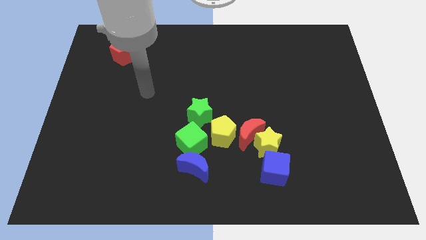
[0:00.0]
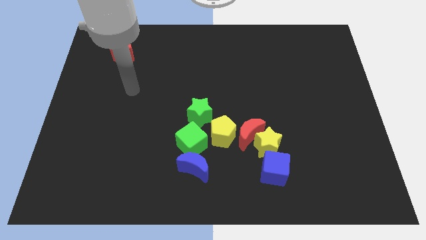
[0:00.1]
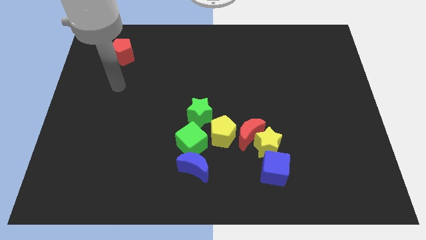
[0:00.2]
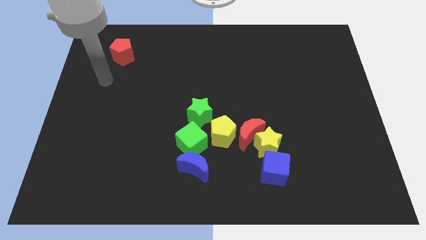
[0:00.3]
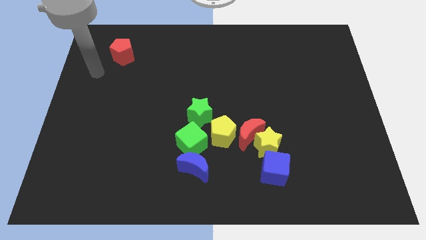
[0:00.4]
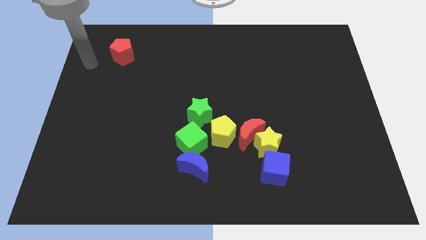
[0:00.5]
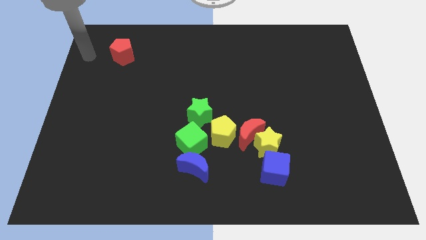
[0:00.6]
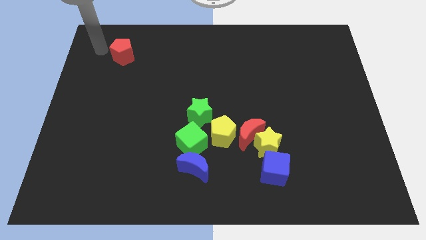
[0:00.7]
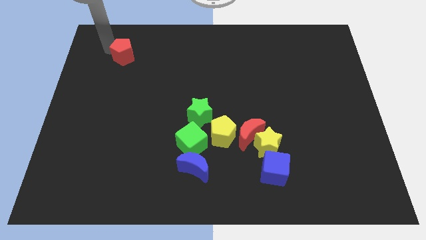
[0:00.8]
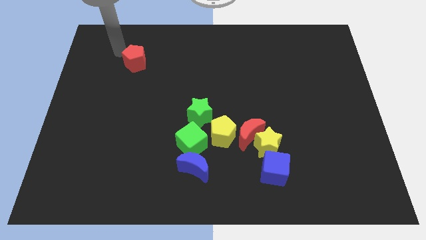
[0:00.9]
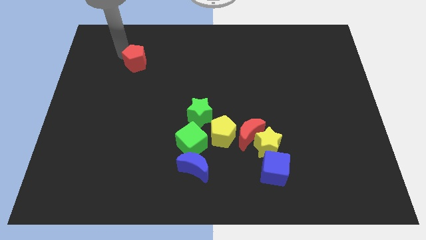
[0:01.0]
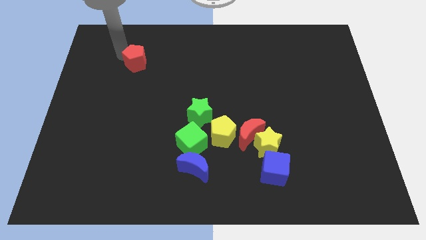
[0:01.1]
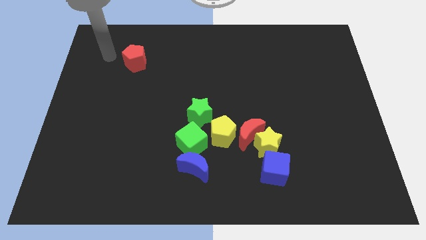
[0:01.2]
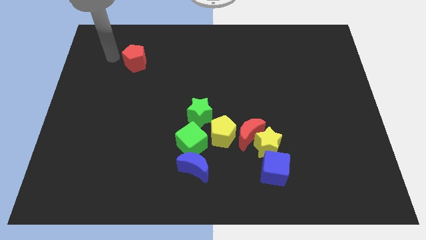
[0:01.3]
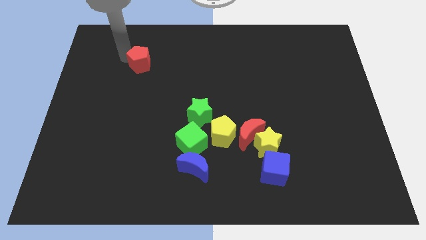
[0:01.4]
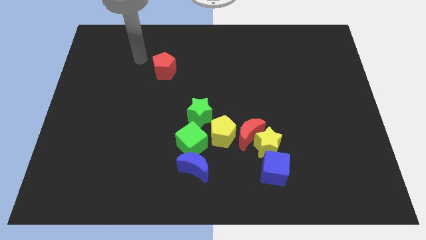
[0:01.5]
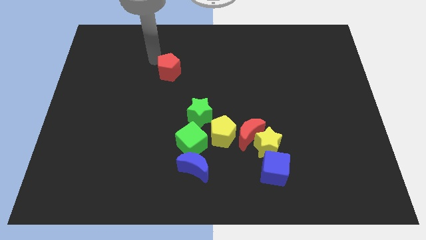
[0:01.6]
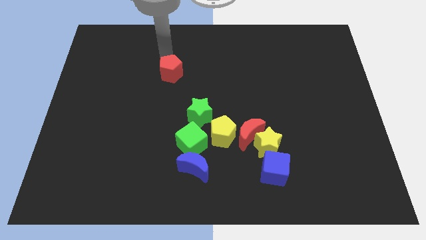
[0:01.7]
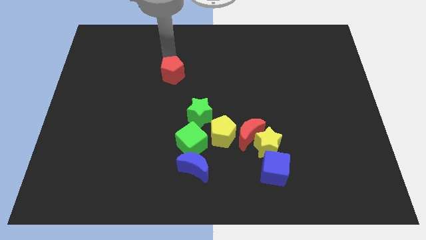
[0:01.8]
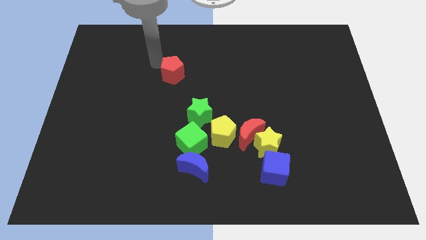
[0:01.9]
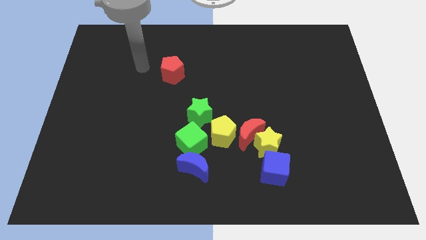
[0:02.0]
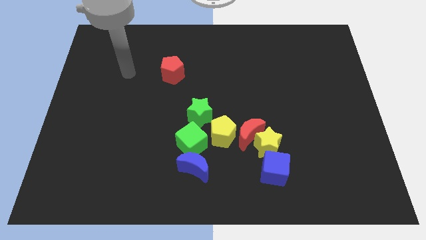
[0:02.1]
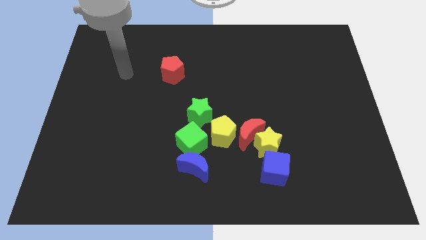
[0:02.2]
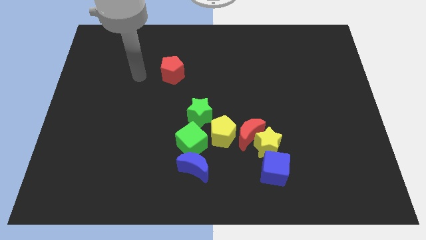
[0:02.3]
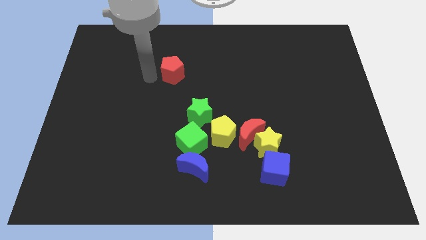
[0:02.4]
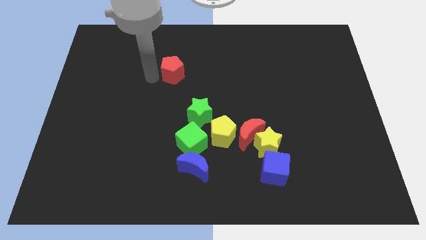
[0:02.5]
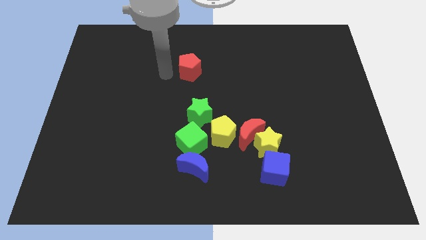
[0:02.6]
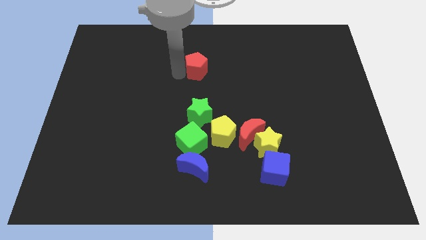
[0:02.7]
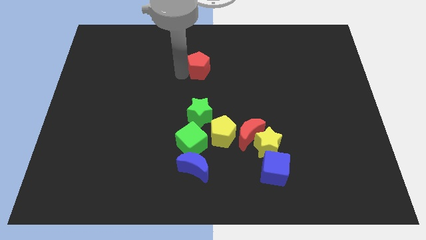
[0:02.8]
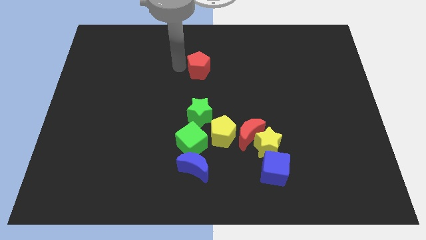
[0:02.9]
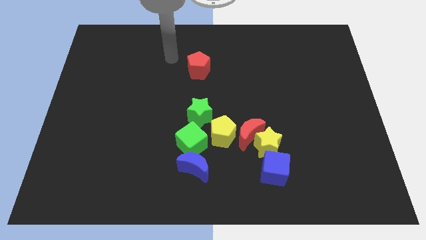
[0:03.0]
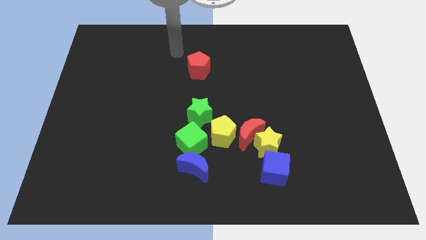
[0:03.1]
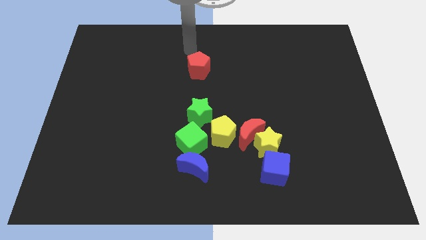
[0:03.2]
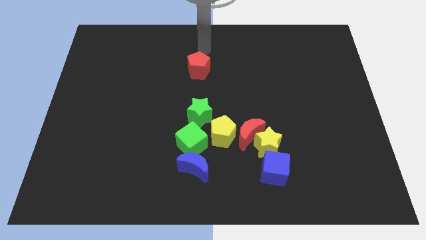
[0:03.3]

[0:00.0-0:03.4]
move the red pentagon above the green star

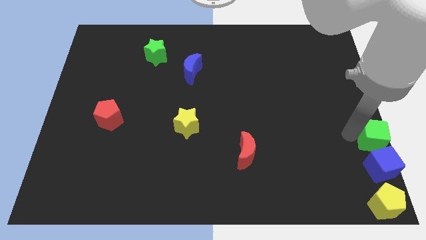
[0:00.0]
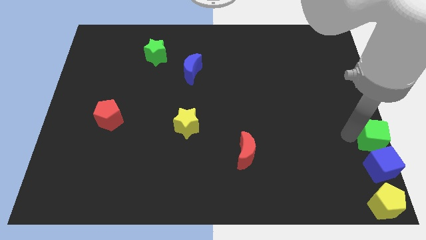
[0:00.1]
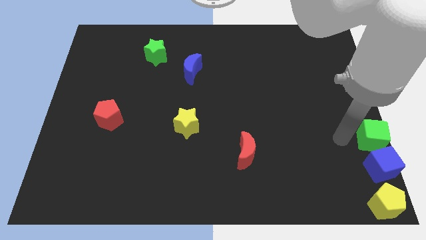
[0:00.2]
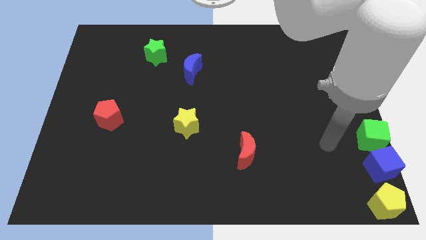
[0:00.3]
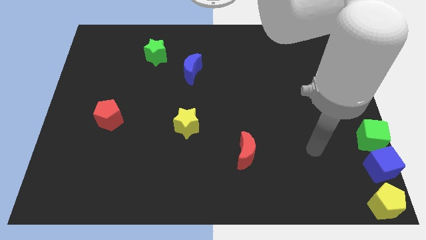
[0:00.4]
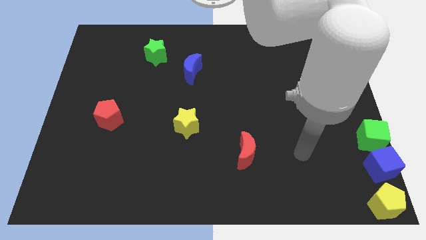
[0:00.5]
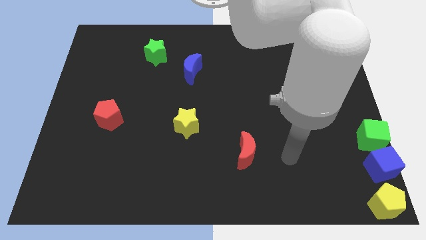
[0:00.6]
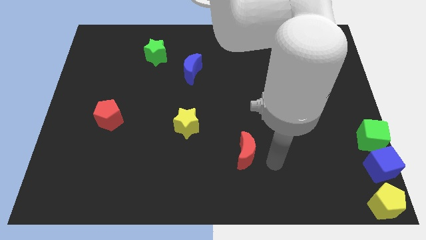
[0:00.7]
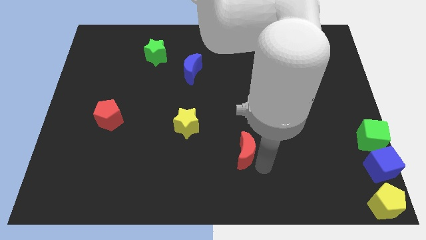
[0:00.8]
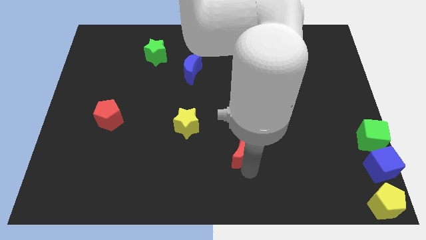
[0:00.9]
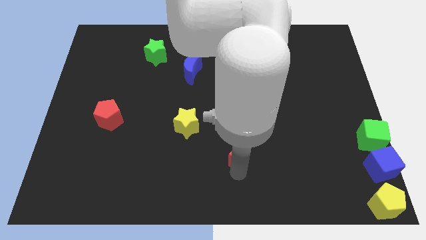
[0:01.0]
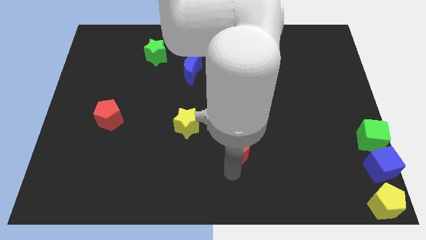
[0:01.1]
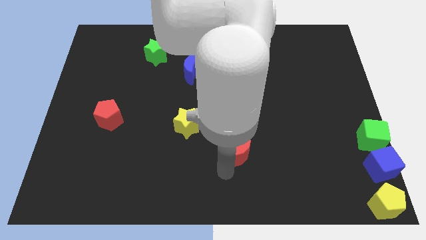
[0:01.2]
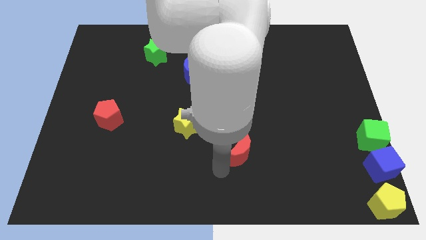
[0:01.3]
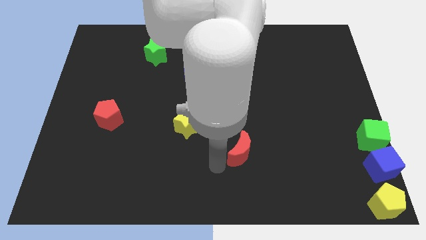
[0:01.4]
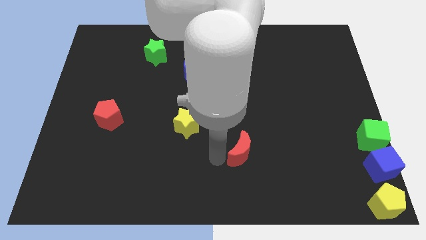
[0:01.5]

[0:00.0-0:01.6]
move your arm away from the green cube

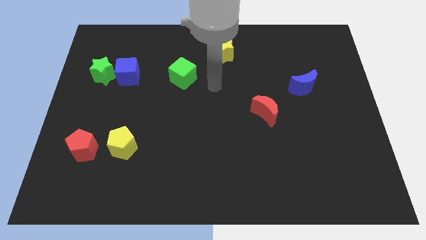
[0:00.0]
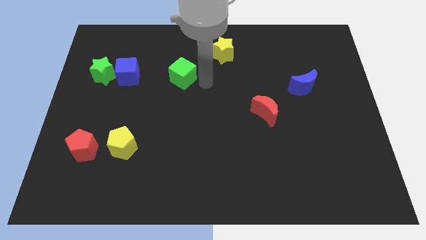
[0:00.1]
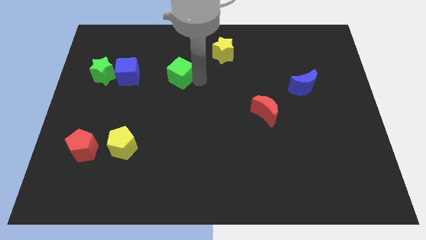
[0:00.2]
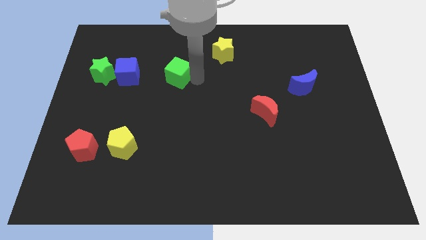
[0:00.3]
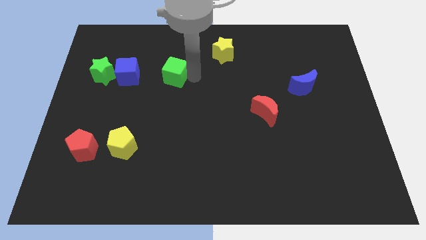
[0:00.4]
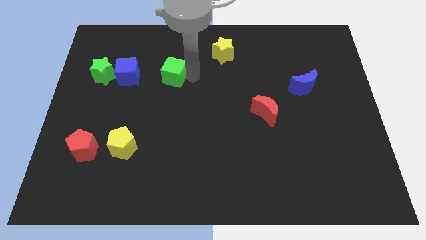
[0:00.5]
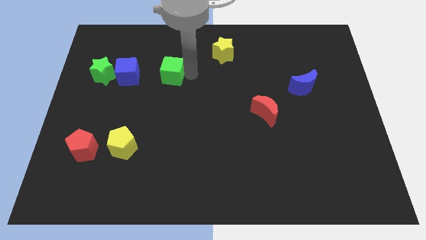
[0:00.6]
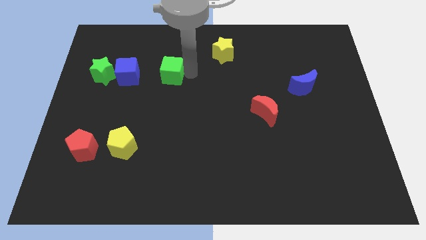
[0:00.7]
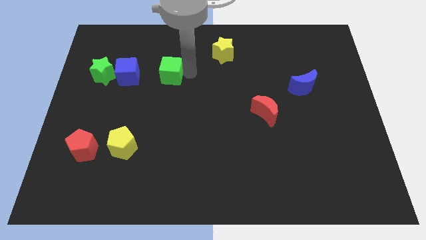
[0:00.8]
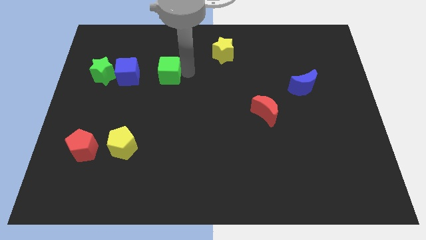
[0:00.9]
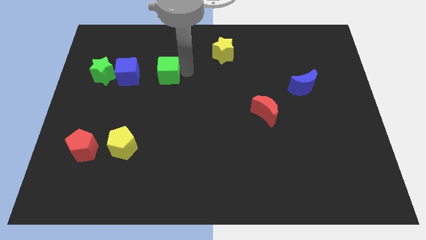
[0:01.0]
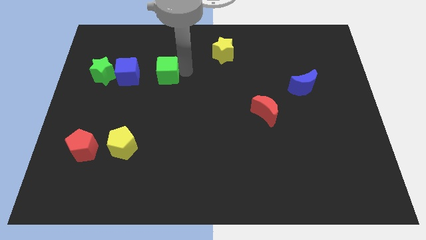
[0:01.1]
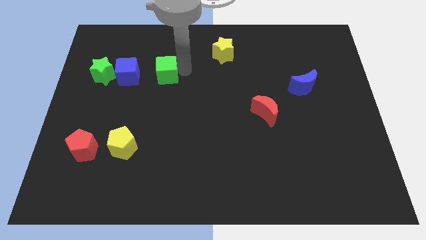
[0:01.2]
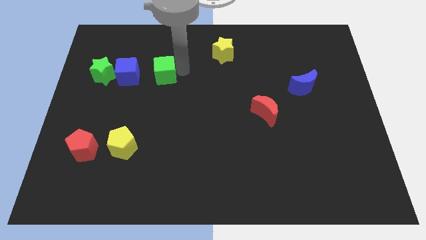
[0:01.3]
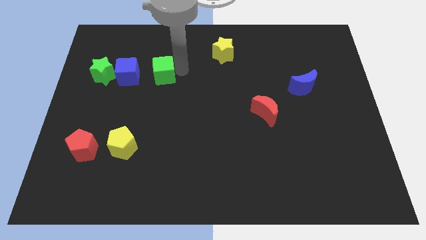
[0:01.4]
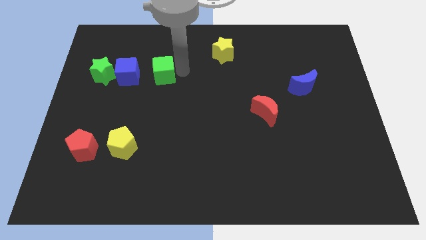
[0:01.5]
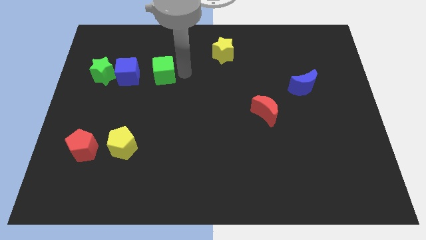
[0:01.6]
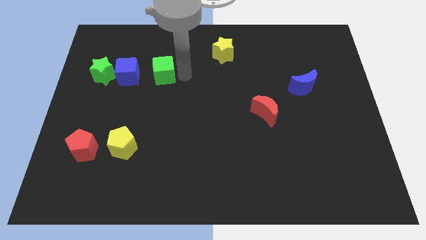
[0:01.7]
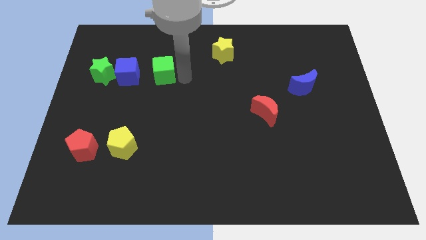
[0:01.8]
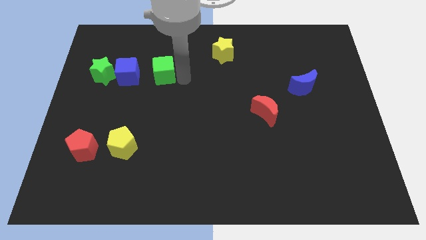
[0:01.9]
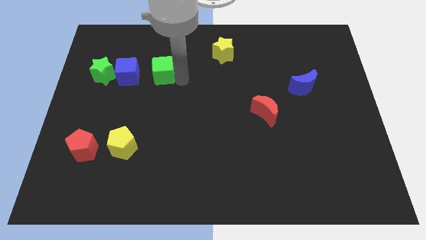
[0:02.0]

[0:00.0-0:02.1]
place the green cube on the right of blue cube

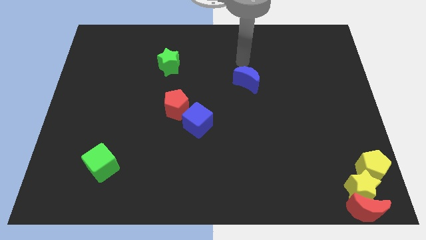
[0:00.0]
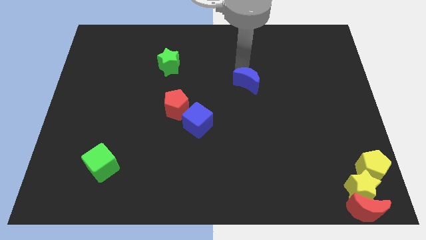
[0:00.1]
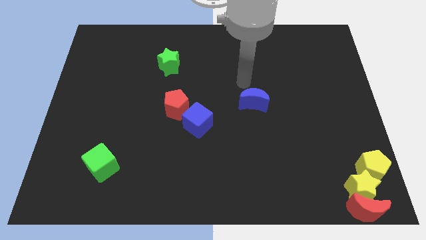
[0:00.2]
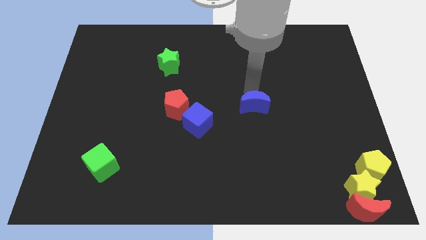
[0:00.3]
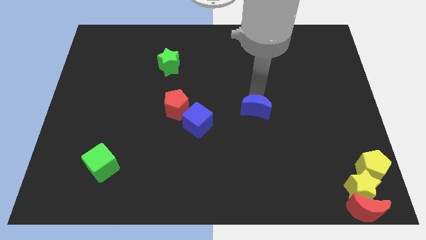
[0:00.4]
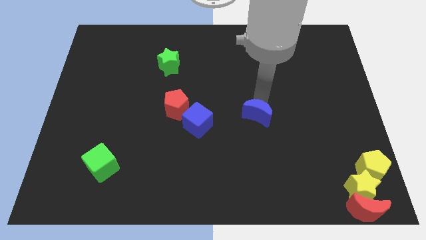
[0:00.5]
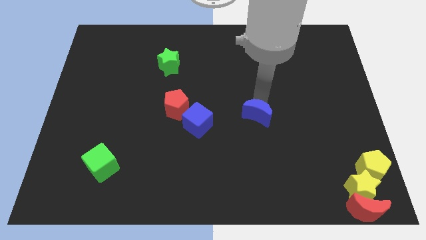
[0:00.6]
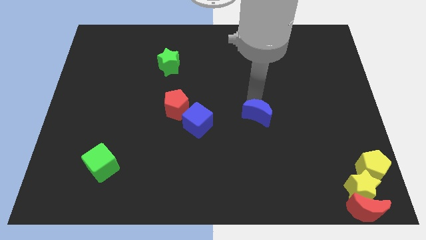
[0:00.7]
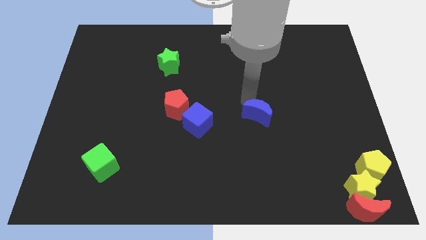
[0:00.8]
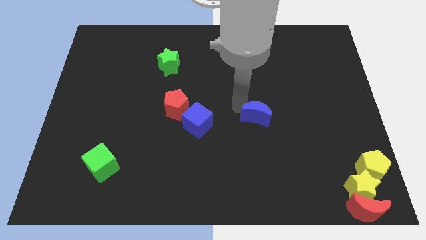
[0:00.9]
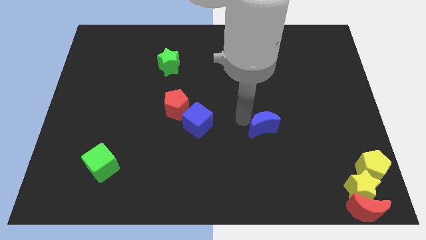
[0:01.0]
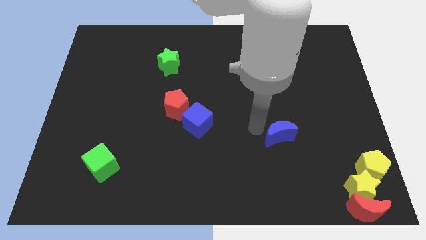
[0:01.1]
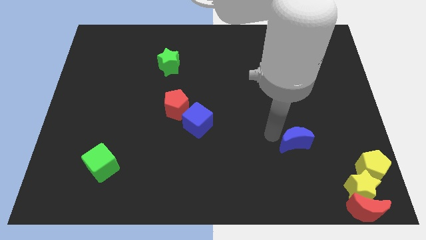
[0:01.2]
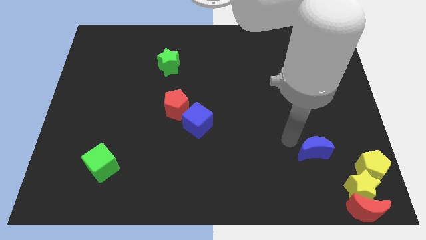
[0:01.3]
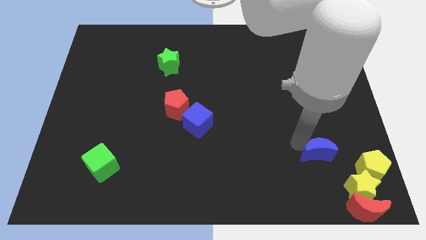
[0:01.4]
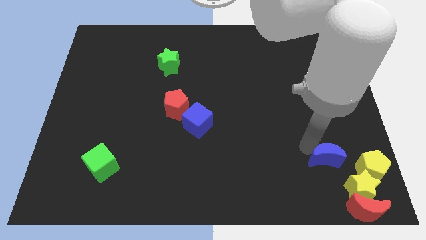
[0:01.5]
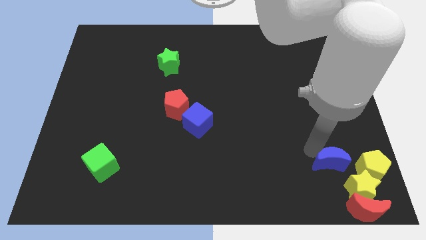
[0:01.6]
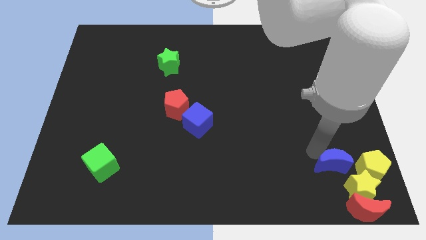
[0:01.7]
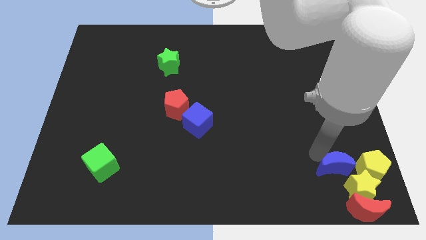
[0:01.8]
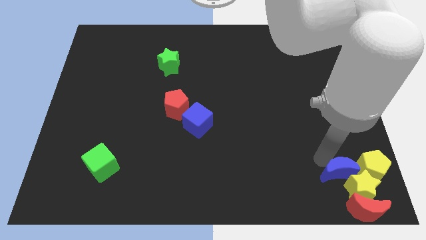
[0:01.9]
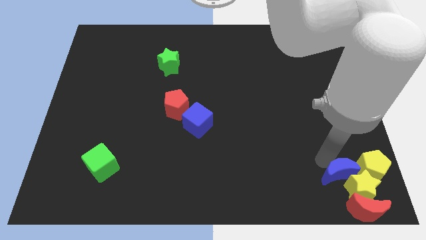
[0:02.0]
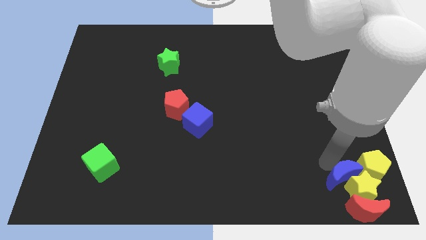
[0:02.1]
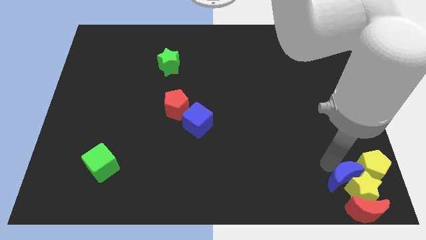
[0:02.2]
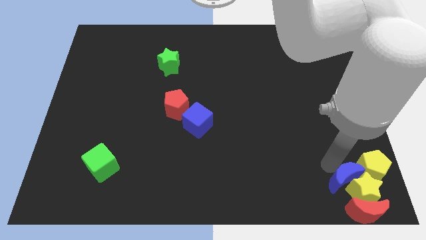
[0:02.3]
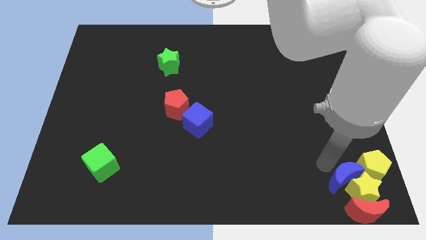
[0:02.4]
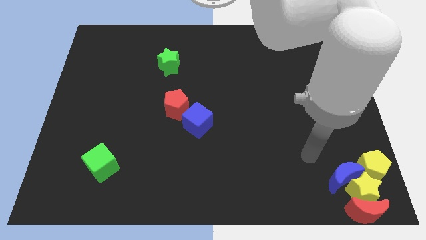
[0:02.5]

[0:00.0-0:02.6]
push the blue moon into the group of blocks
